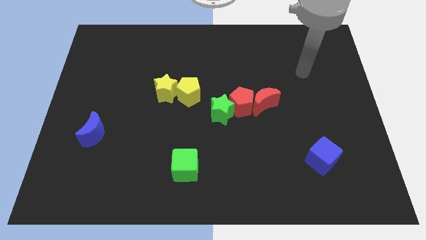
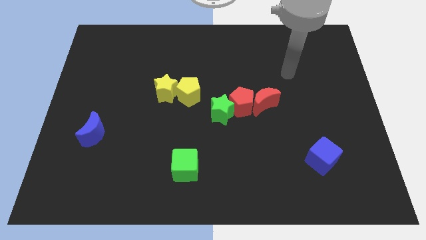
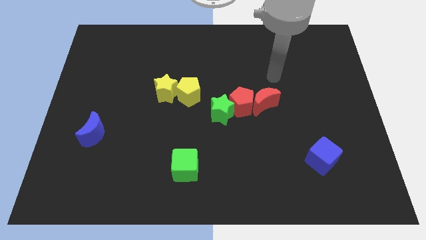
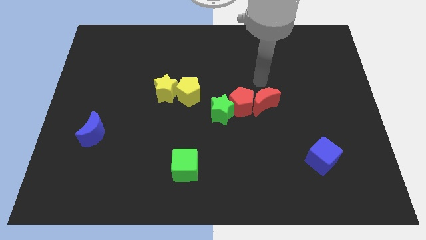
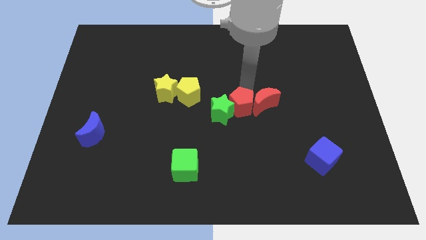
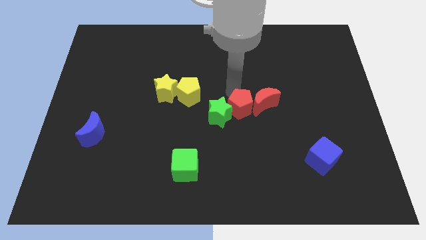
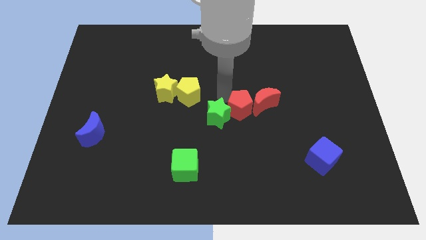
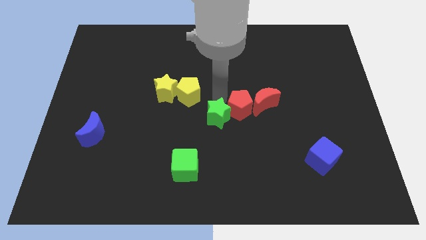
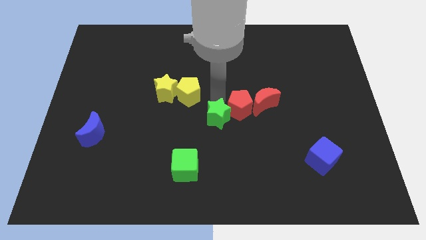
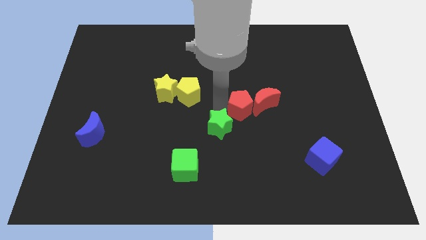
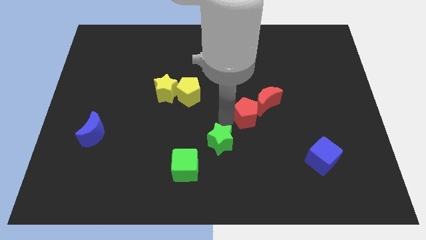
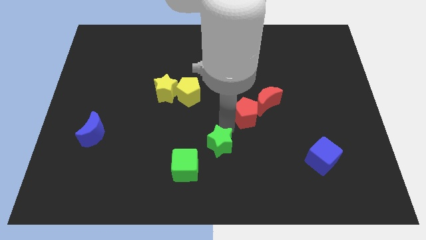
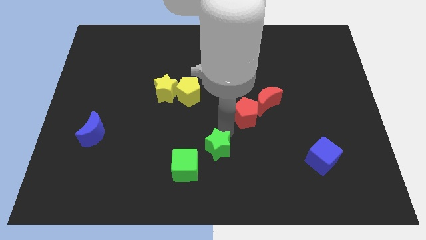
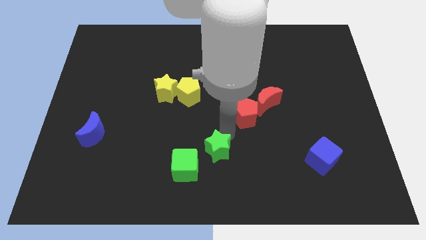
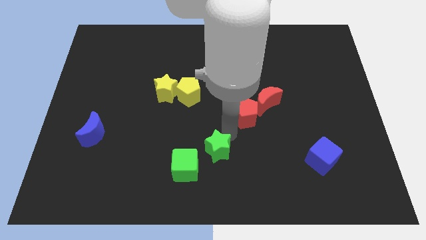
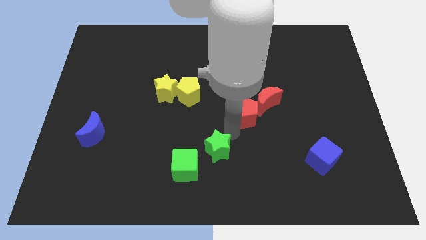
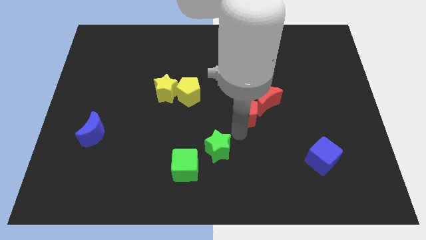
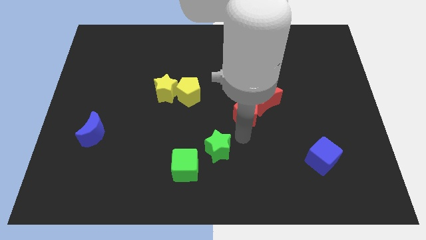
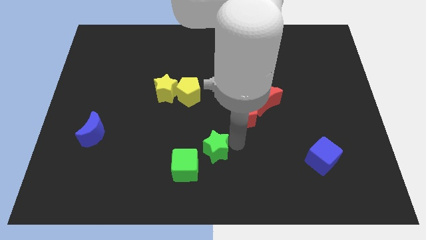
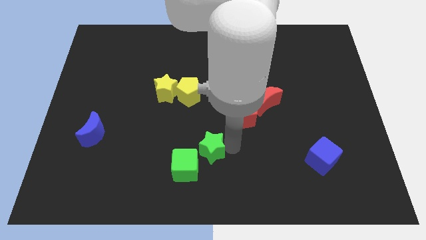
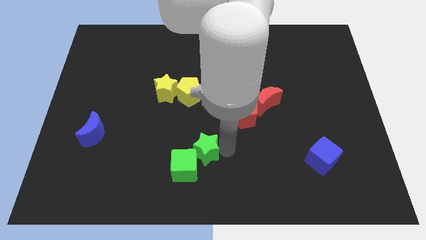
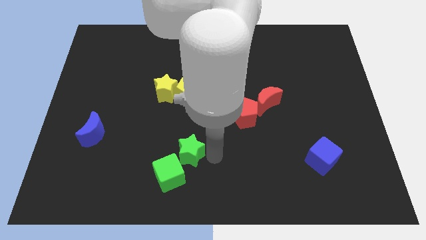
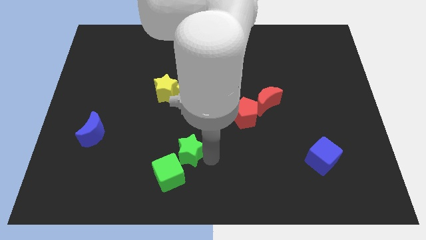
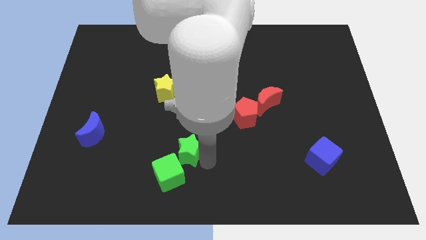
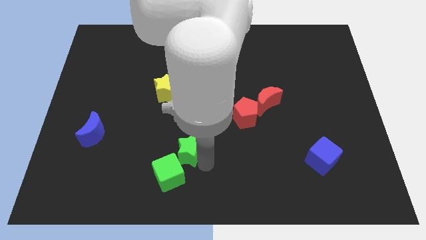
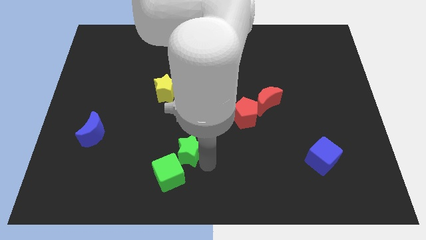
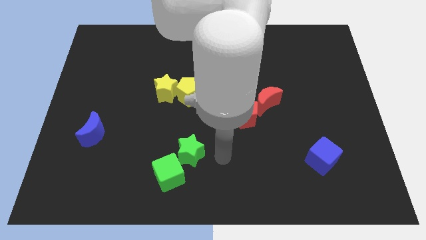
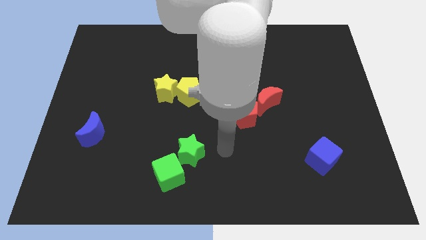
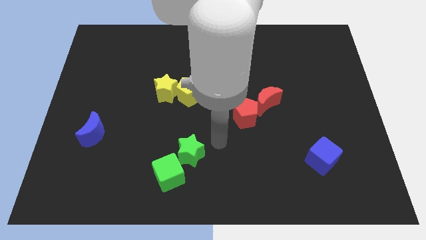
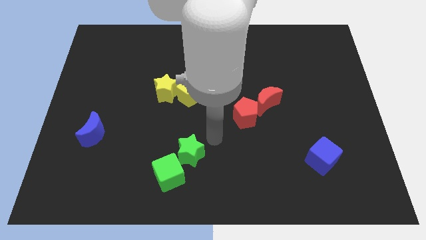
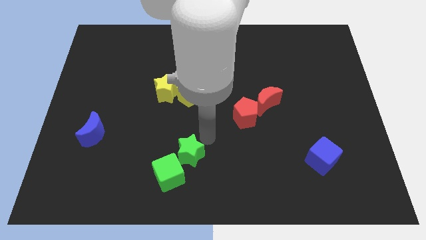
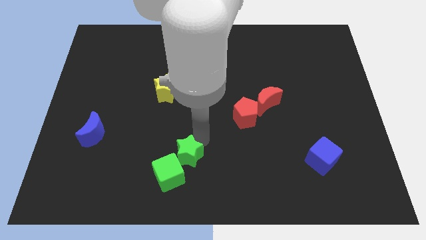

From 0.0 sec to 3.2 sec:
push both the green blocks to the bottom side of the board

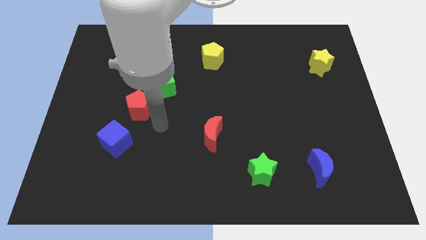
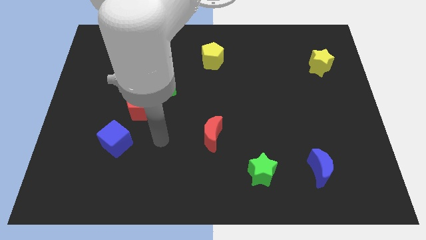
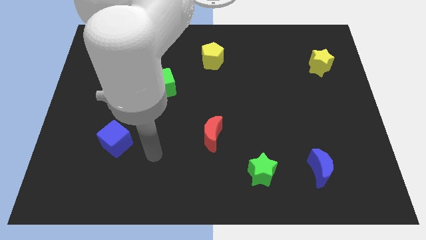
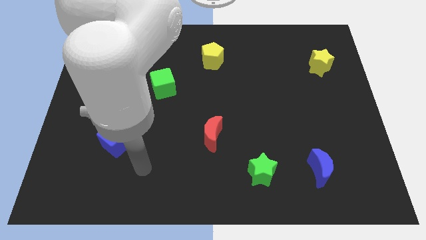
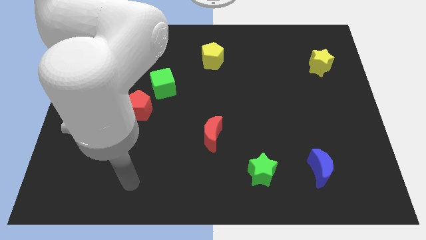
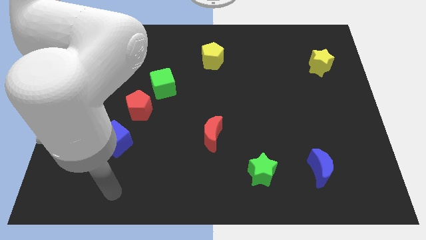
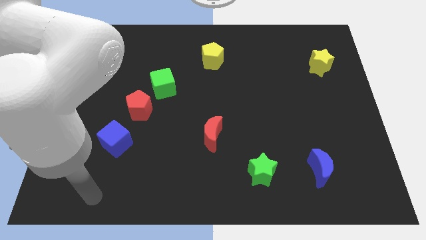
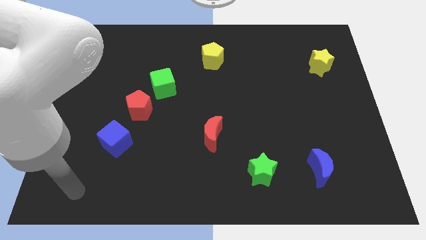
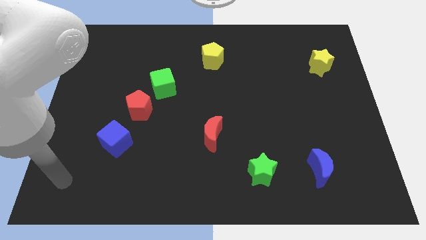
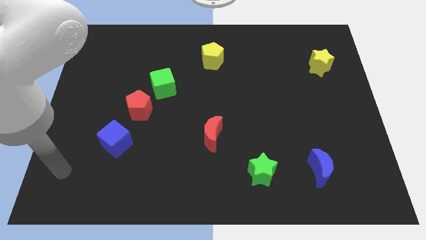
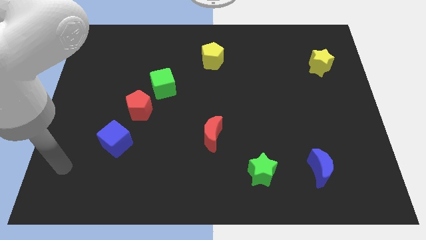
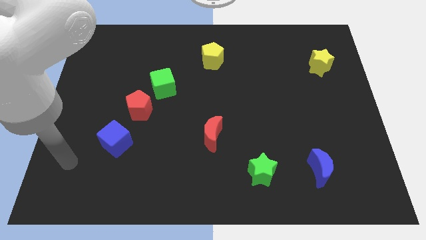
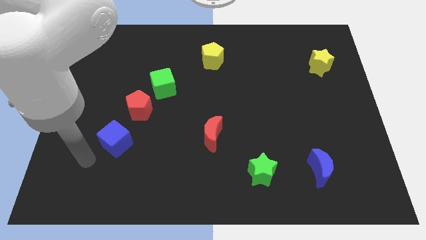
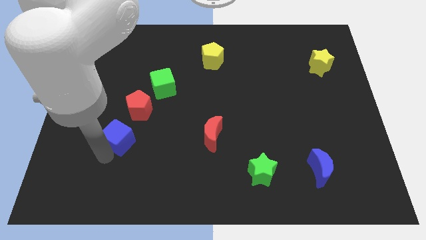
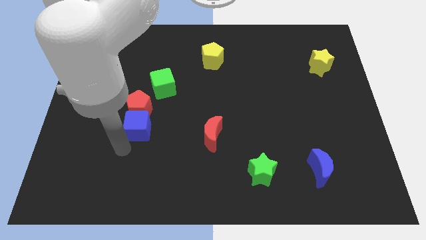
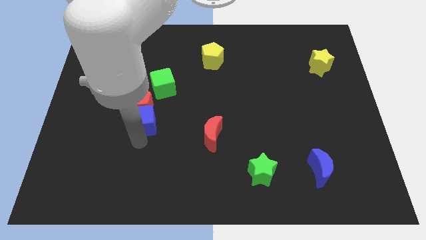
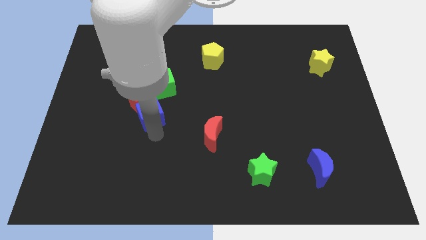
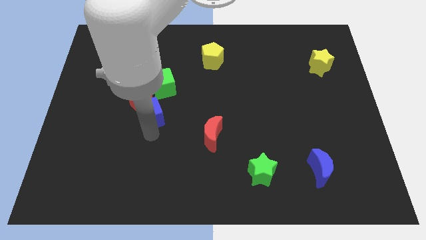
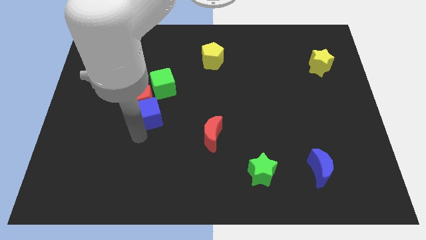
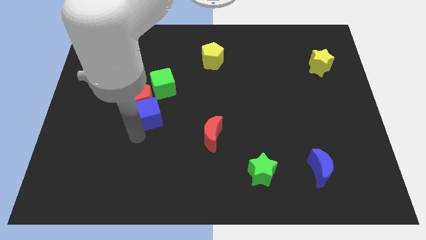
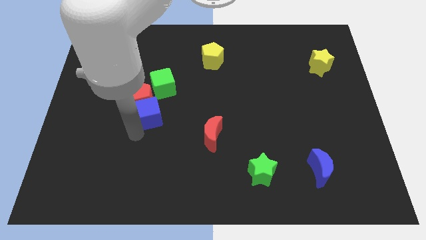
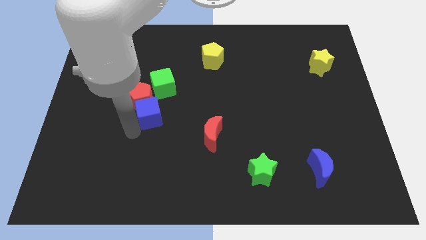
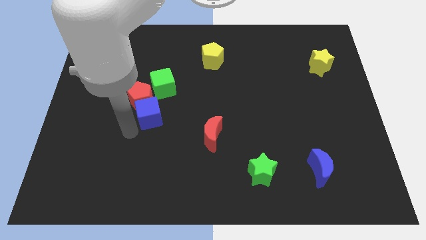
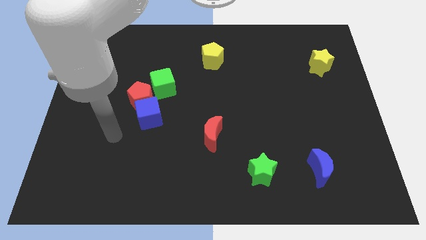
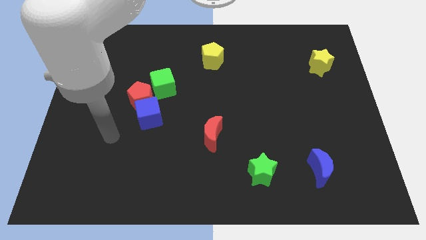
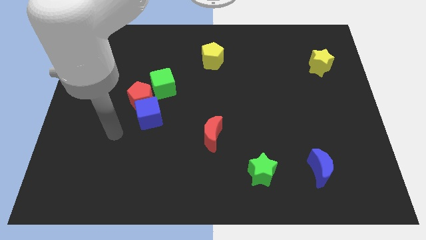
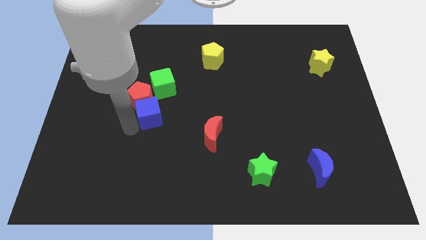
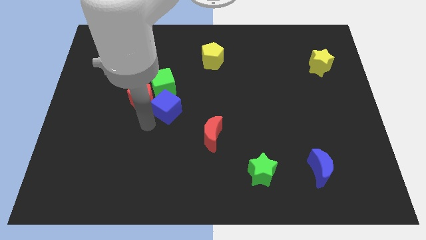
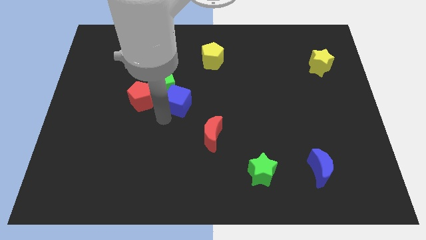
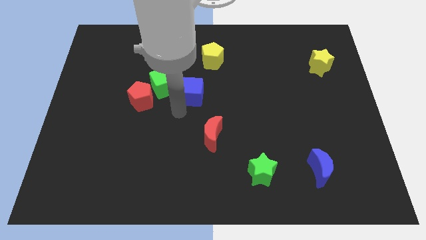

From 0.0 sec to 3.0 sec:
place the blue cube bottom right to the green cube

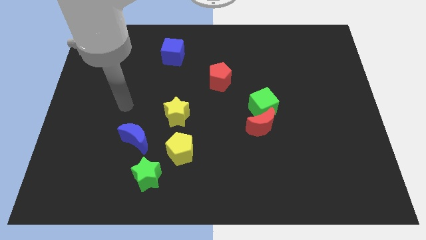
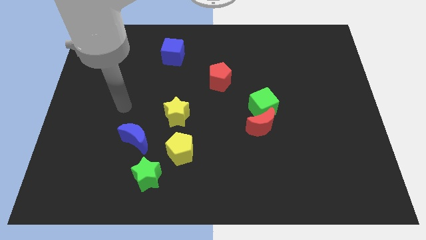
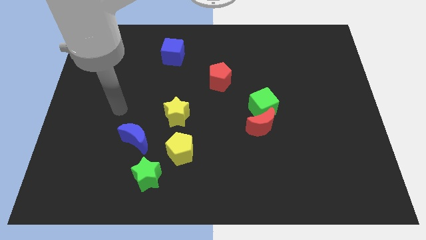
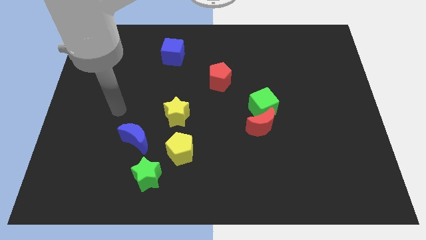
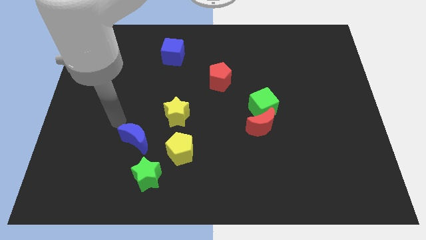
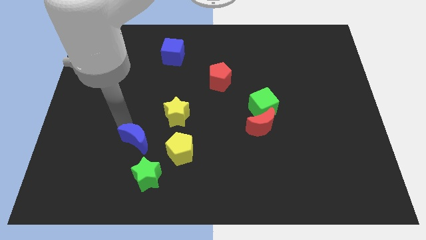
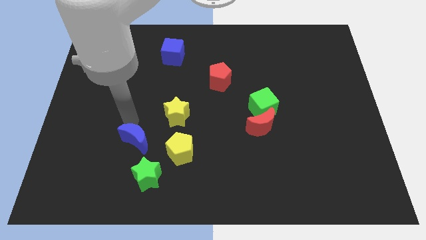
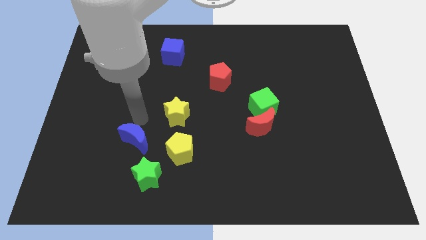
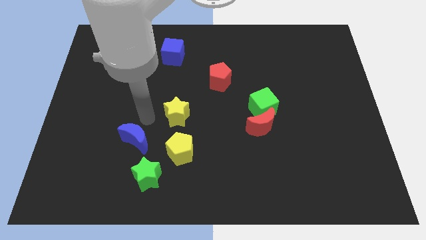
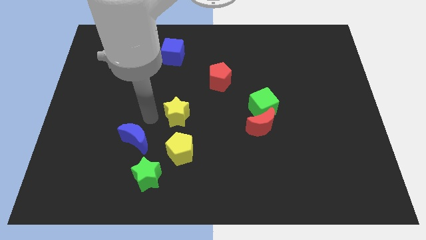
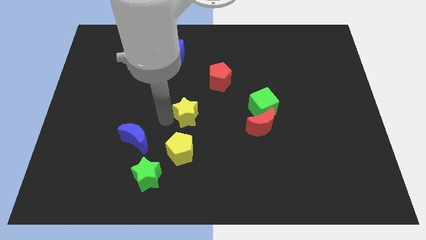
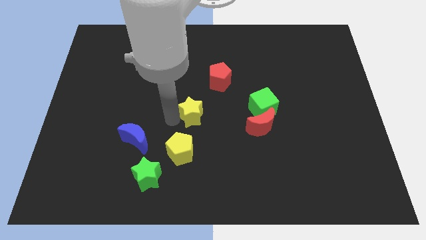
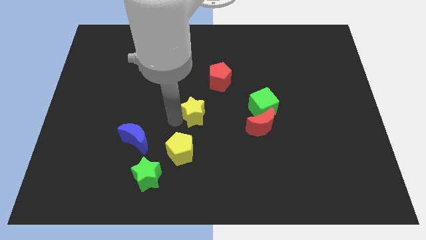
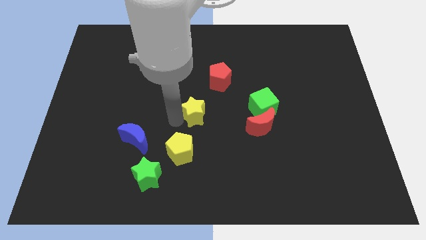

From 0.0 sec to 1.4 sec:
push the yellow star to the right slightly

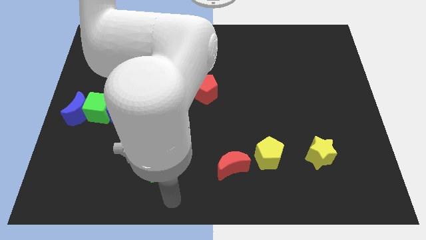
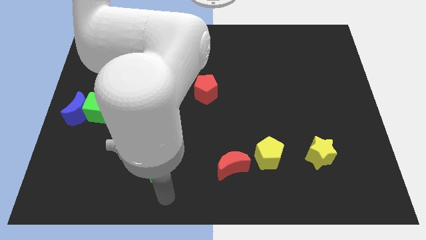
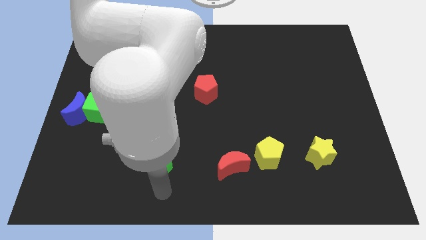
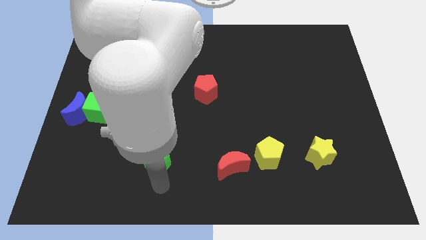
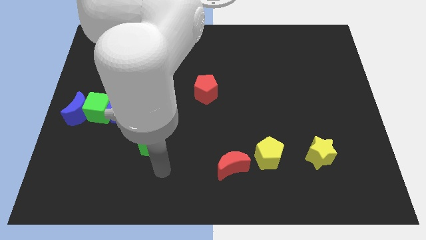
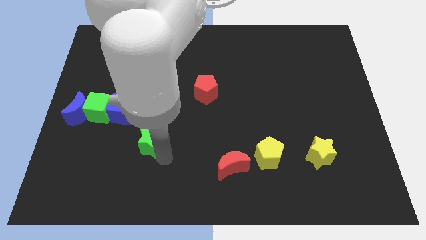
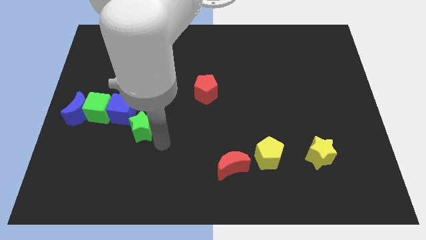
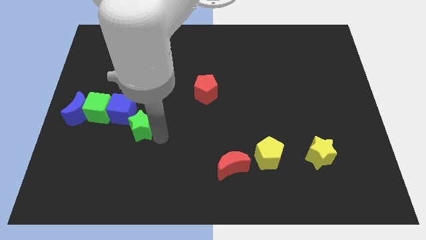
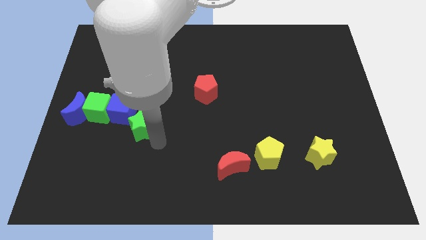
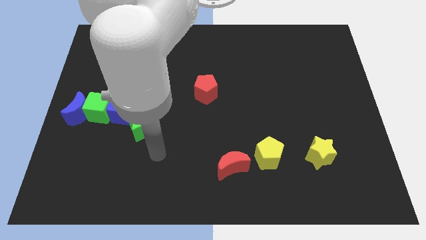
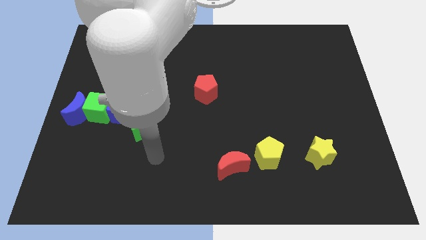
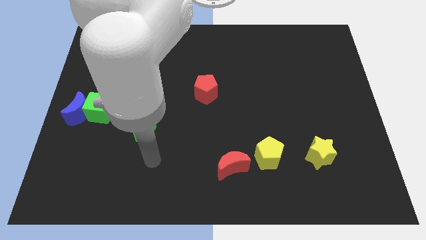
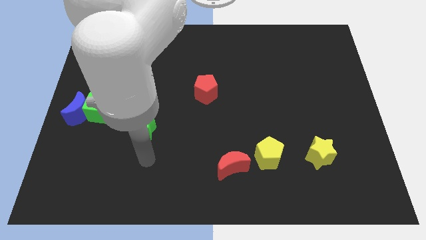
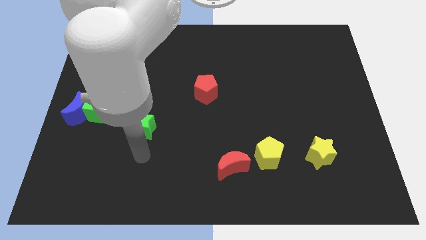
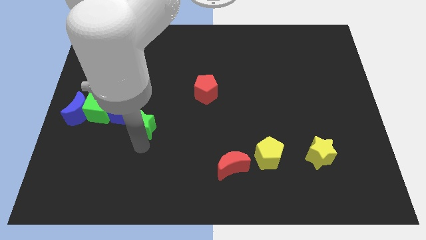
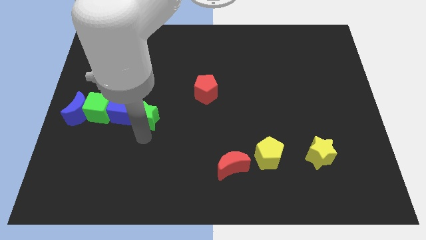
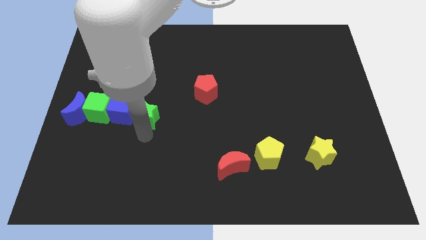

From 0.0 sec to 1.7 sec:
place the green star close to the blue cube
